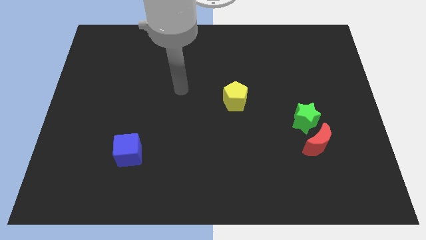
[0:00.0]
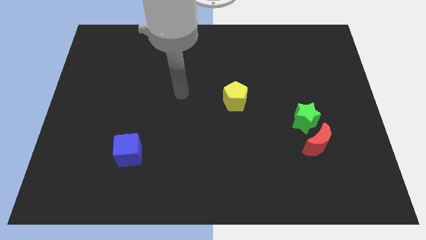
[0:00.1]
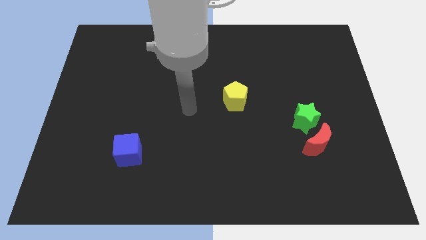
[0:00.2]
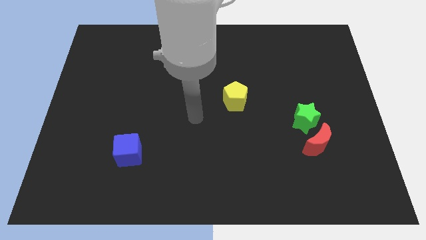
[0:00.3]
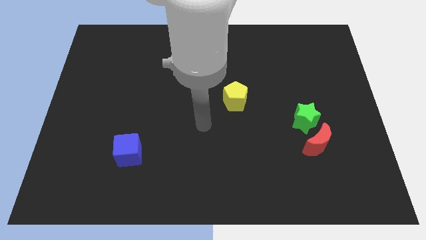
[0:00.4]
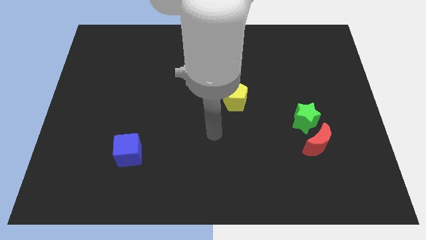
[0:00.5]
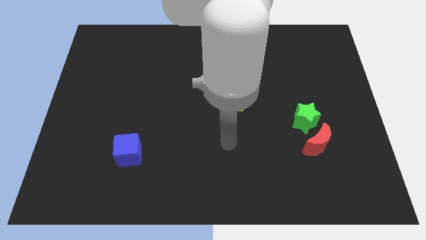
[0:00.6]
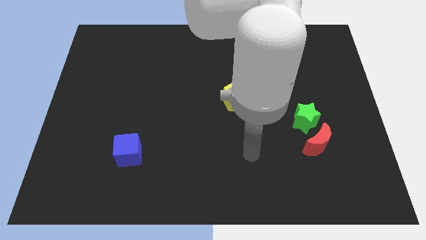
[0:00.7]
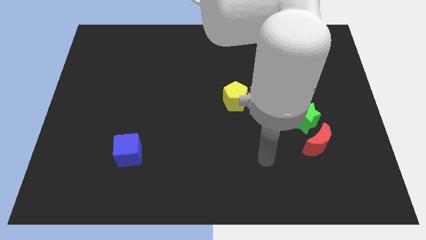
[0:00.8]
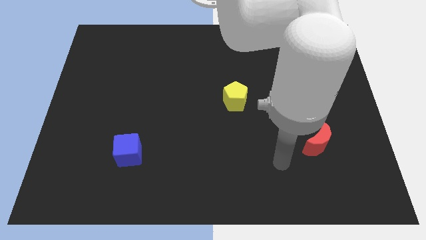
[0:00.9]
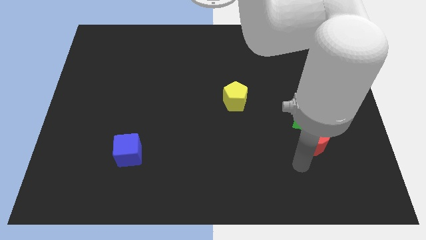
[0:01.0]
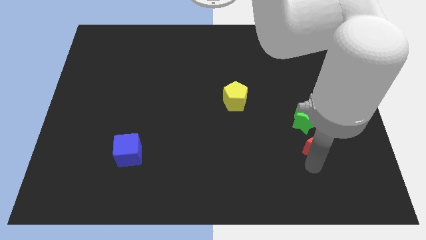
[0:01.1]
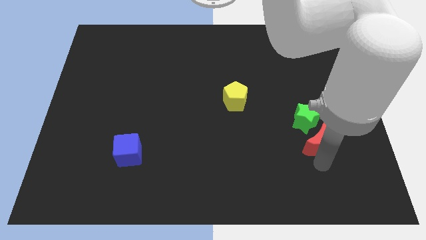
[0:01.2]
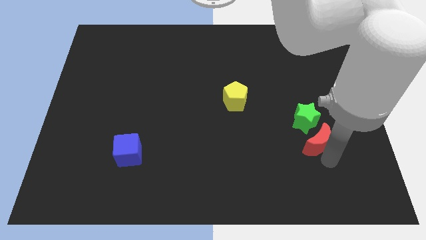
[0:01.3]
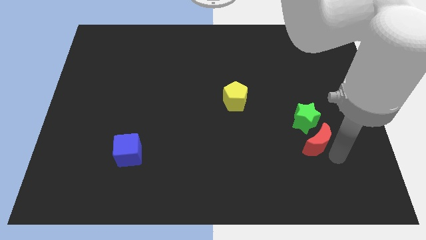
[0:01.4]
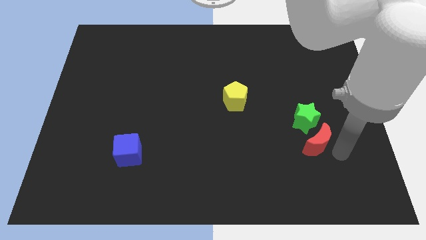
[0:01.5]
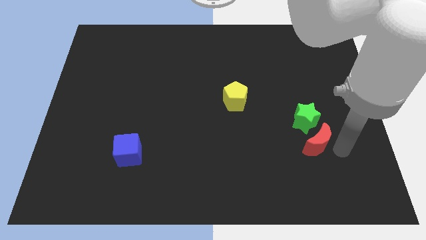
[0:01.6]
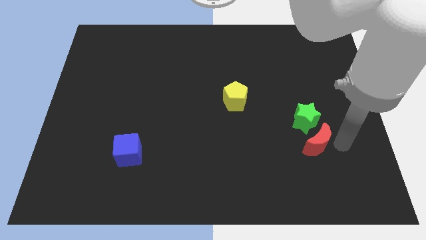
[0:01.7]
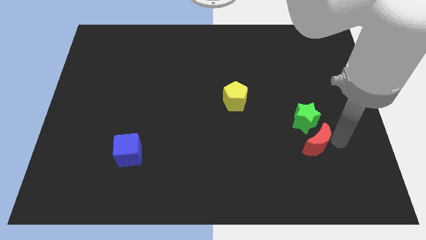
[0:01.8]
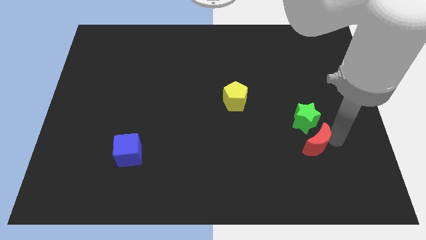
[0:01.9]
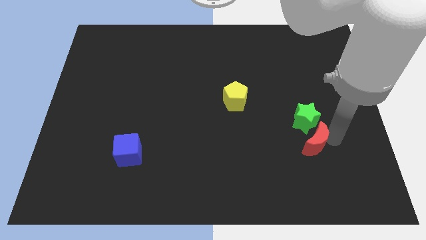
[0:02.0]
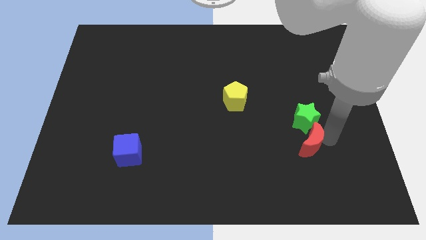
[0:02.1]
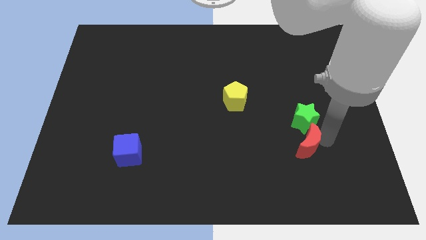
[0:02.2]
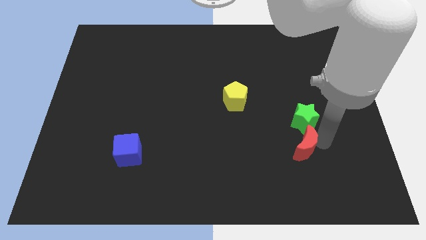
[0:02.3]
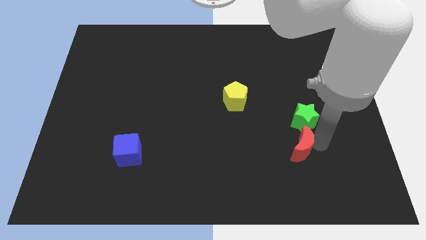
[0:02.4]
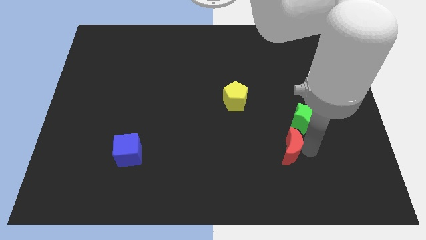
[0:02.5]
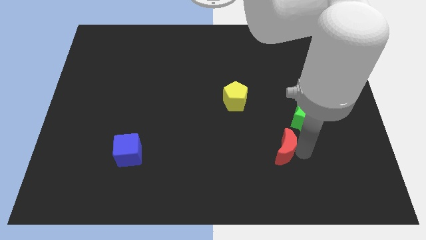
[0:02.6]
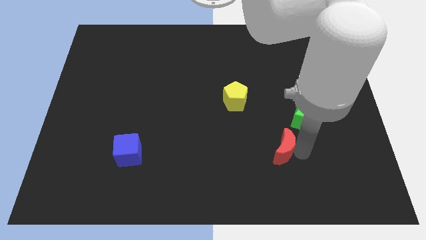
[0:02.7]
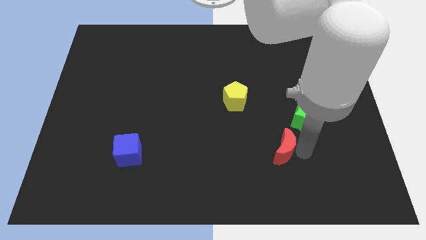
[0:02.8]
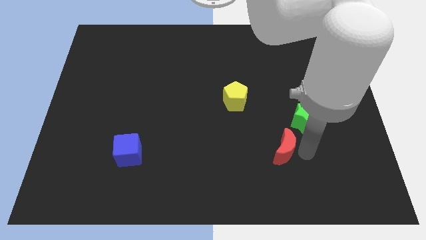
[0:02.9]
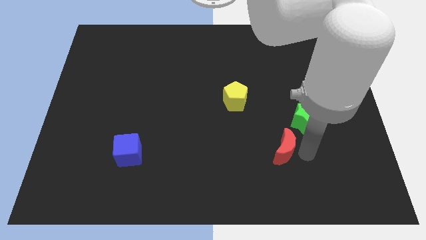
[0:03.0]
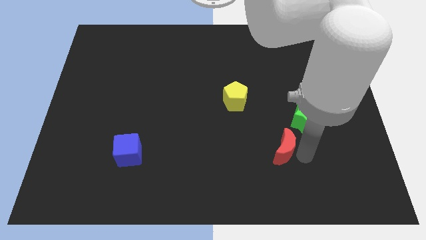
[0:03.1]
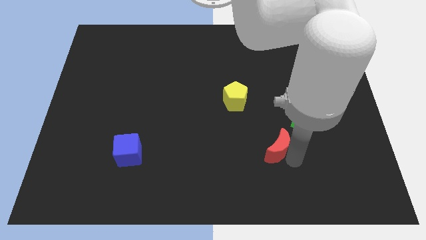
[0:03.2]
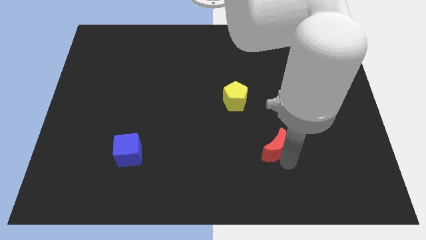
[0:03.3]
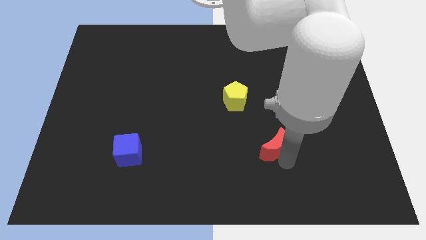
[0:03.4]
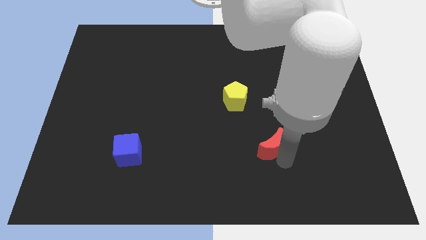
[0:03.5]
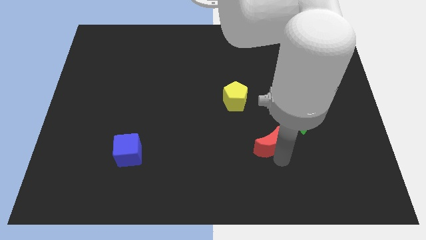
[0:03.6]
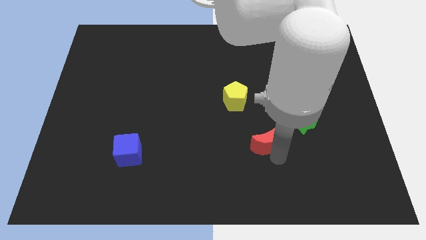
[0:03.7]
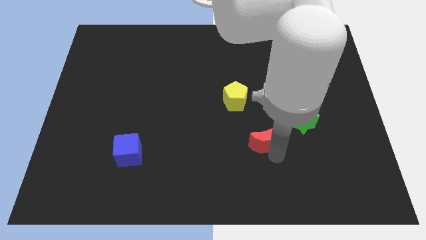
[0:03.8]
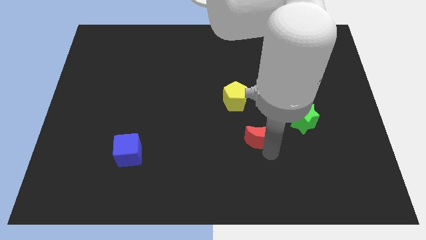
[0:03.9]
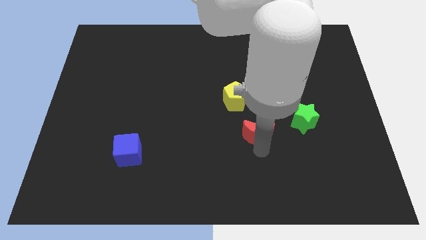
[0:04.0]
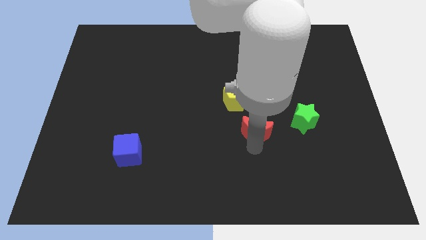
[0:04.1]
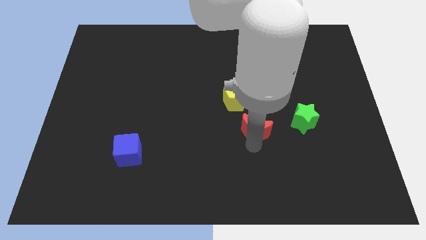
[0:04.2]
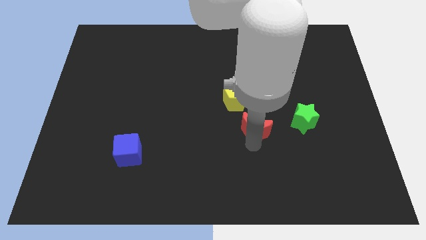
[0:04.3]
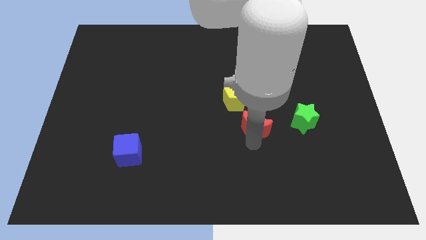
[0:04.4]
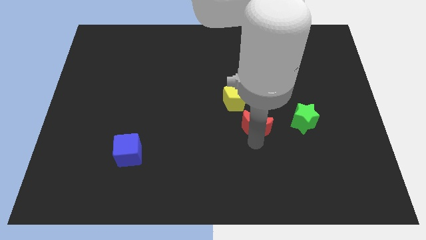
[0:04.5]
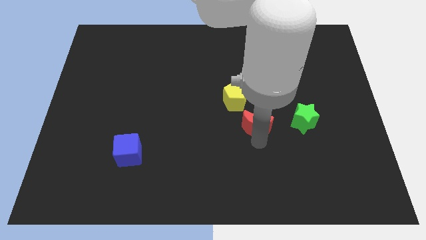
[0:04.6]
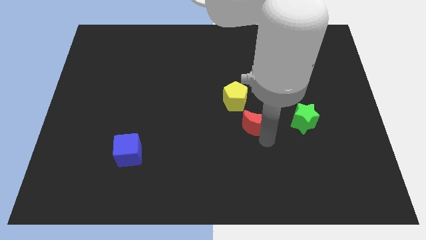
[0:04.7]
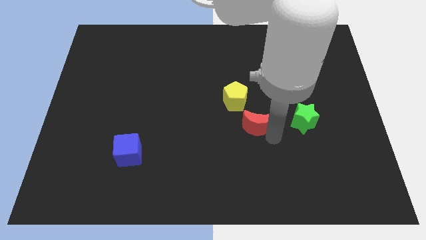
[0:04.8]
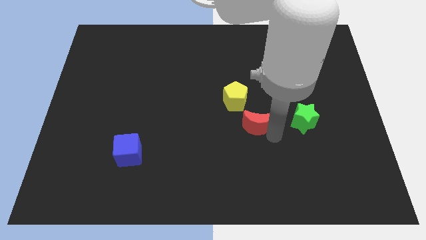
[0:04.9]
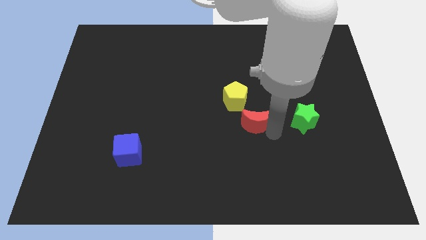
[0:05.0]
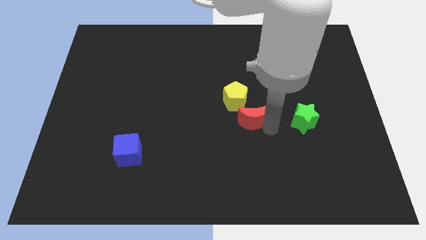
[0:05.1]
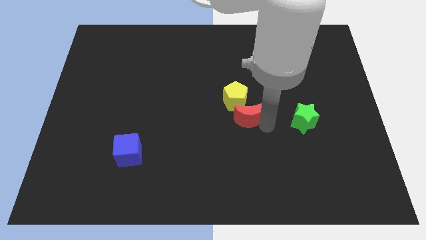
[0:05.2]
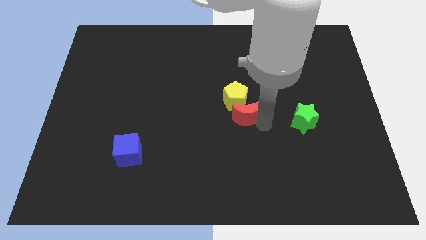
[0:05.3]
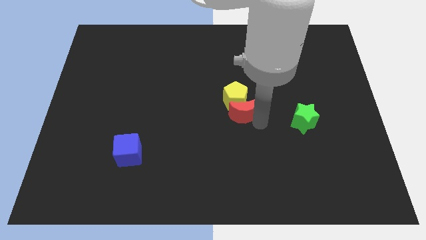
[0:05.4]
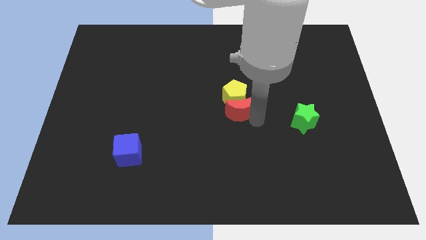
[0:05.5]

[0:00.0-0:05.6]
push the moon towards the pentagon

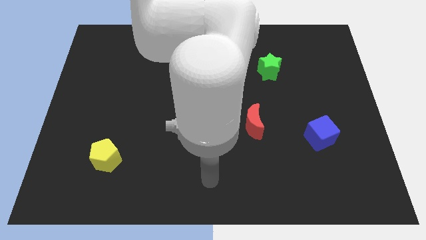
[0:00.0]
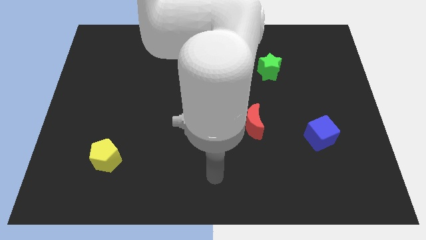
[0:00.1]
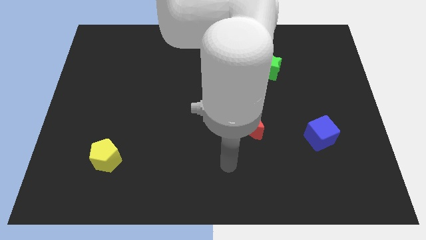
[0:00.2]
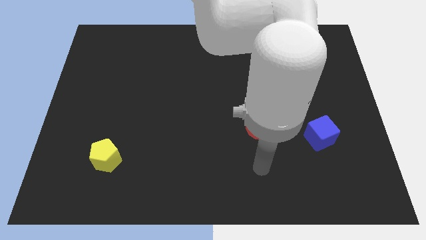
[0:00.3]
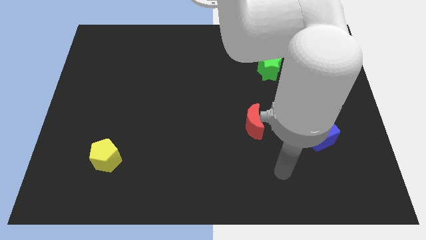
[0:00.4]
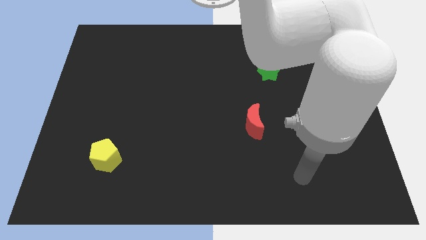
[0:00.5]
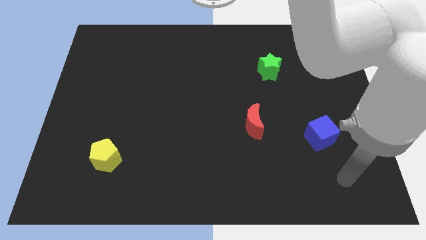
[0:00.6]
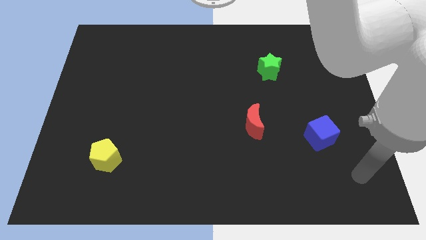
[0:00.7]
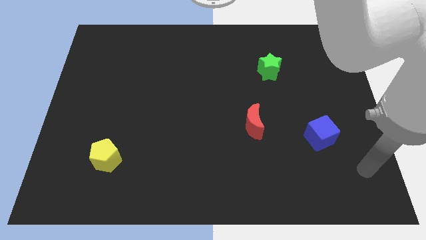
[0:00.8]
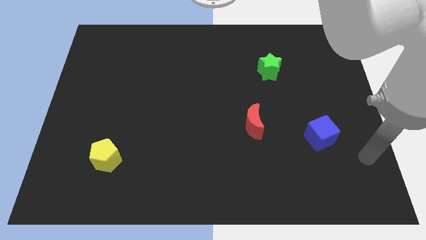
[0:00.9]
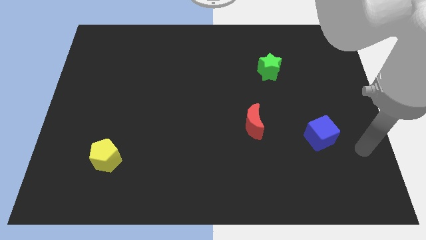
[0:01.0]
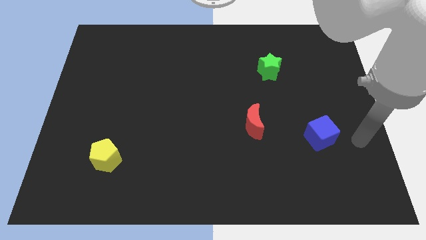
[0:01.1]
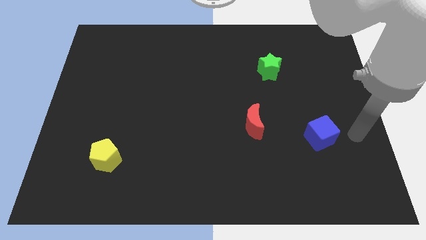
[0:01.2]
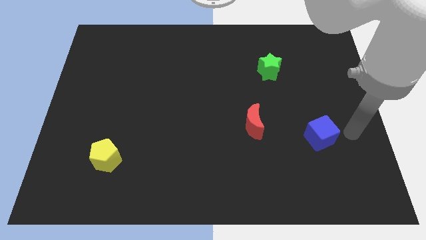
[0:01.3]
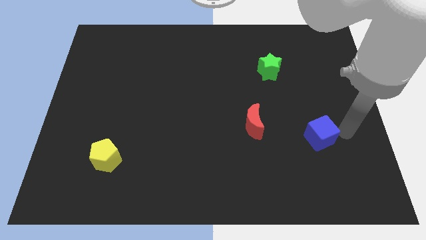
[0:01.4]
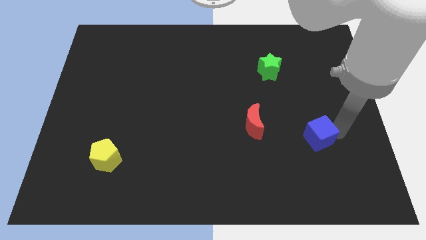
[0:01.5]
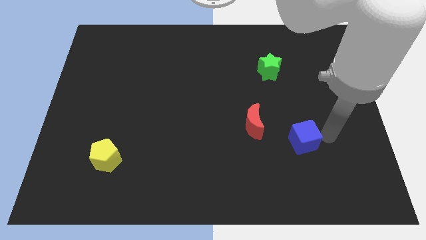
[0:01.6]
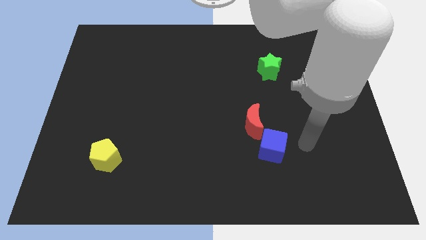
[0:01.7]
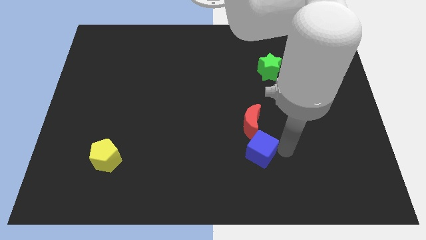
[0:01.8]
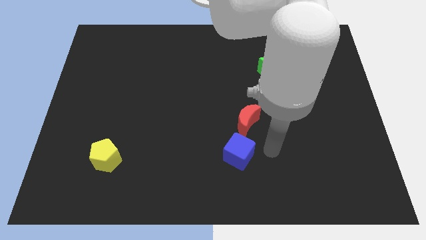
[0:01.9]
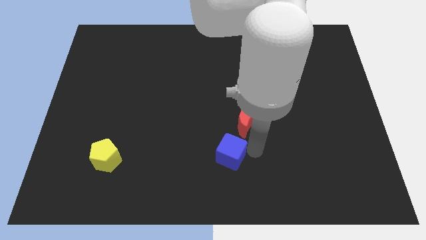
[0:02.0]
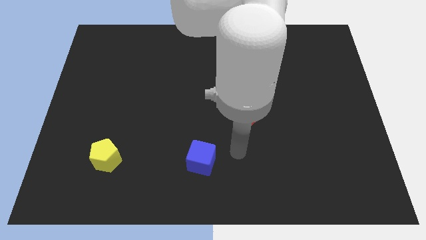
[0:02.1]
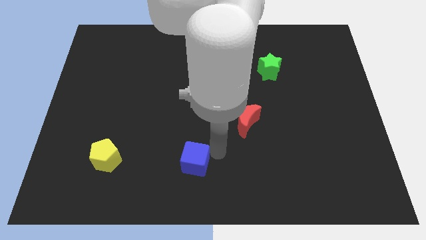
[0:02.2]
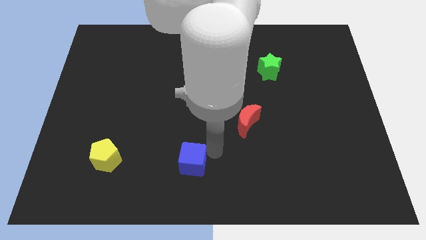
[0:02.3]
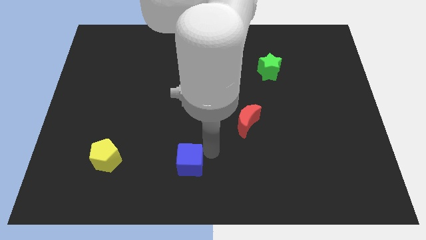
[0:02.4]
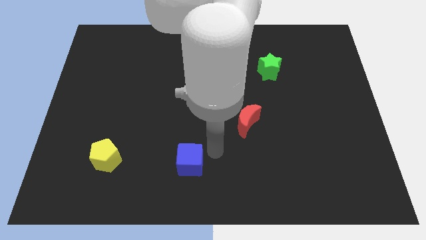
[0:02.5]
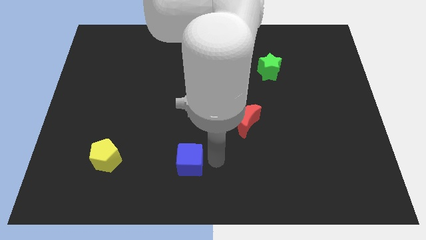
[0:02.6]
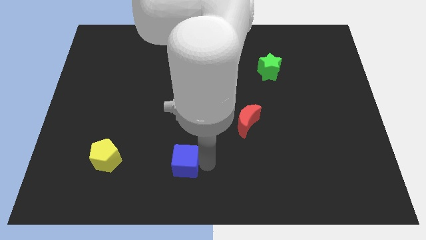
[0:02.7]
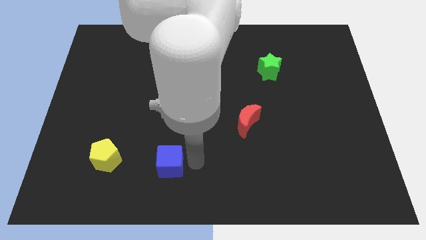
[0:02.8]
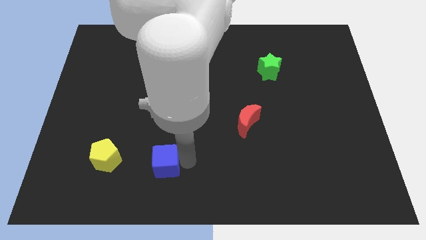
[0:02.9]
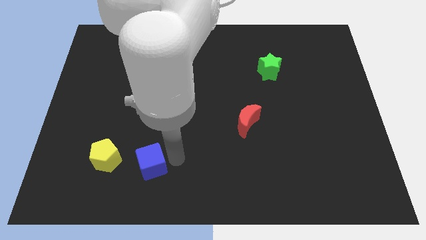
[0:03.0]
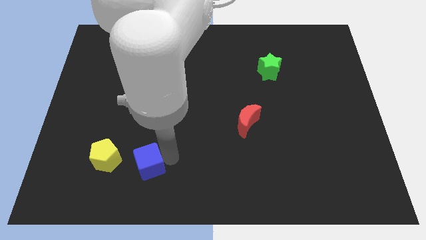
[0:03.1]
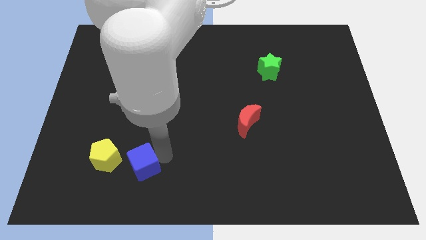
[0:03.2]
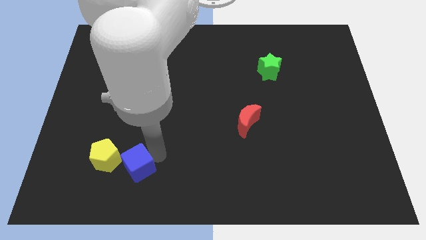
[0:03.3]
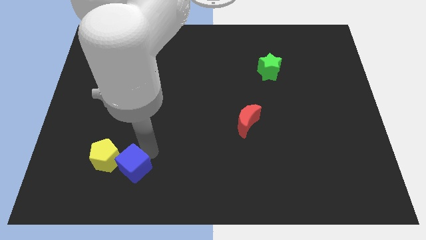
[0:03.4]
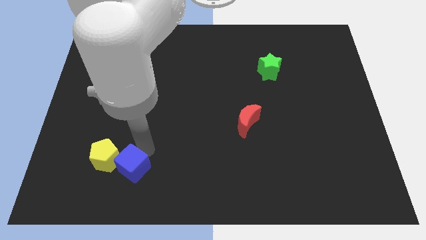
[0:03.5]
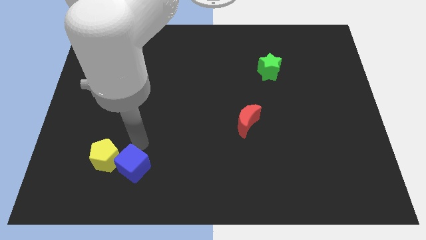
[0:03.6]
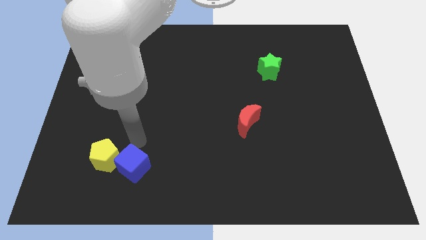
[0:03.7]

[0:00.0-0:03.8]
push the blue cube towards the pentagon
